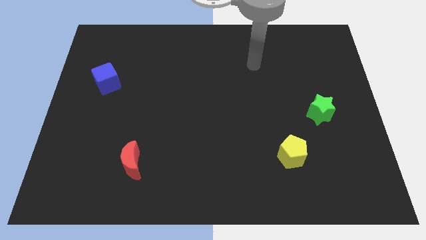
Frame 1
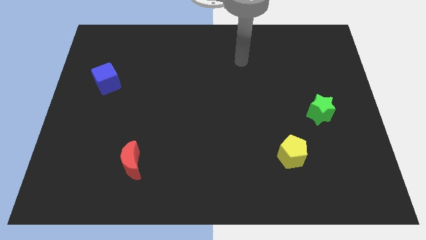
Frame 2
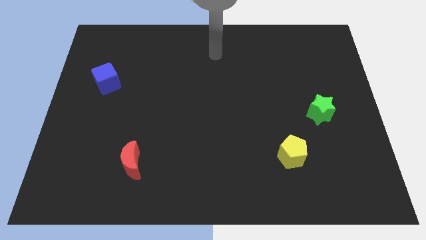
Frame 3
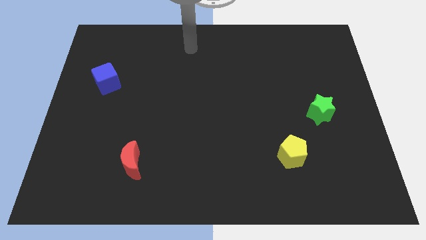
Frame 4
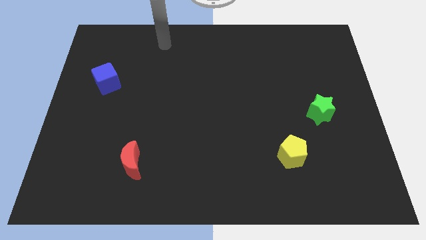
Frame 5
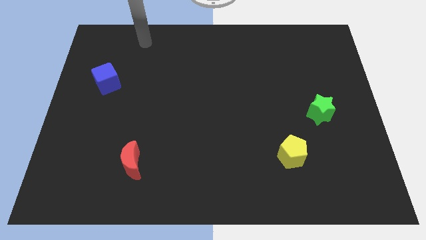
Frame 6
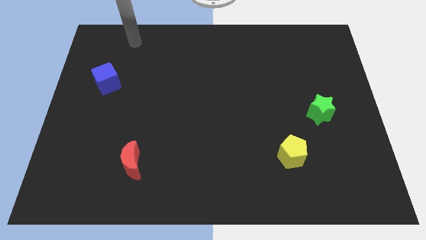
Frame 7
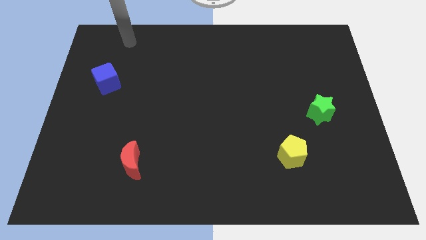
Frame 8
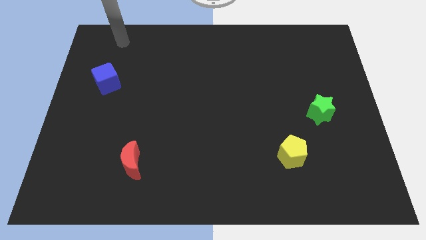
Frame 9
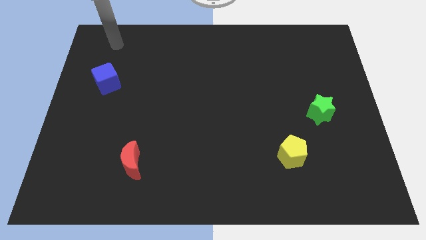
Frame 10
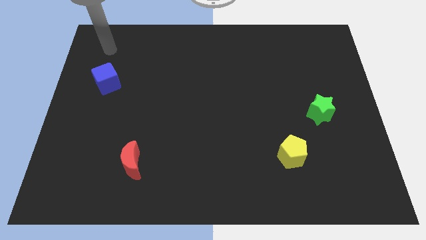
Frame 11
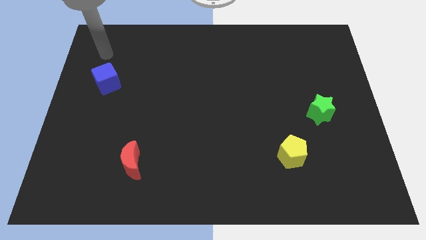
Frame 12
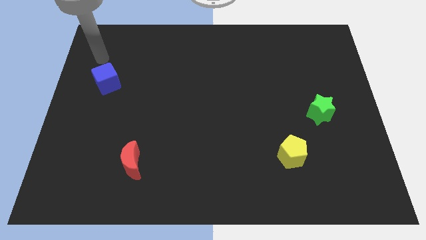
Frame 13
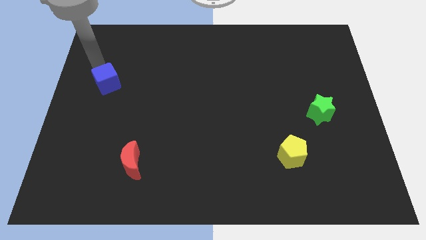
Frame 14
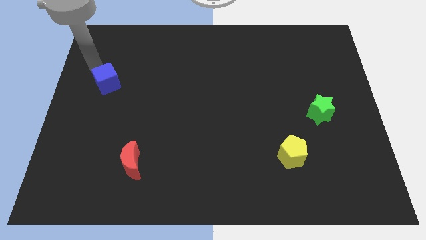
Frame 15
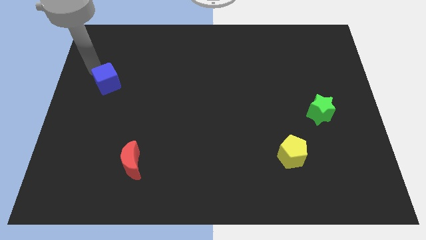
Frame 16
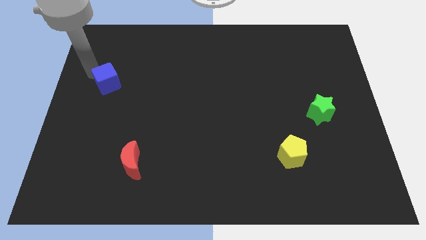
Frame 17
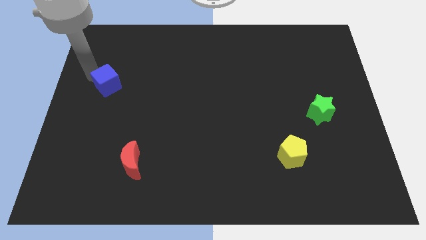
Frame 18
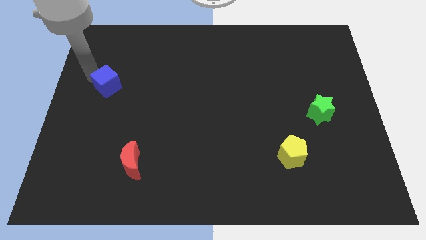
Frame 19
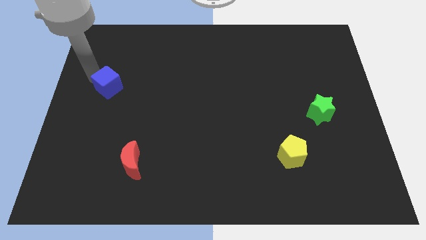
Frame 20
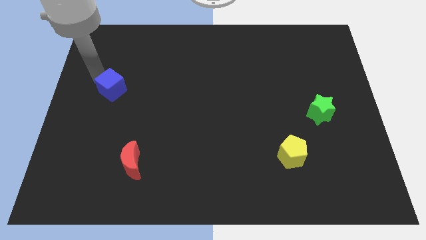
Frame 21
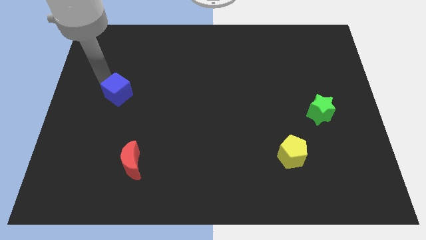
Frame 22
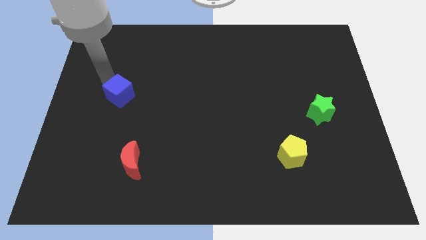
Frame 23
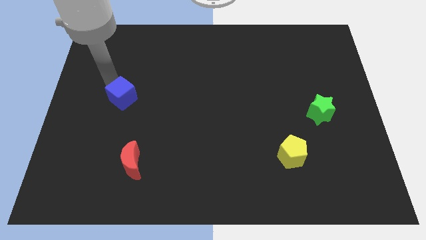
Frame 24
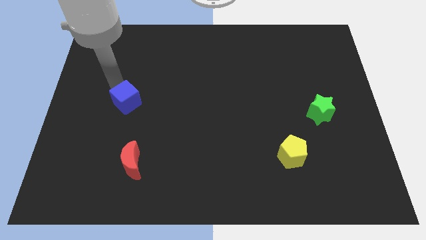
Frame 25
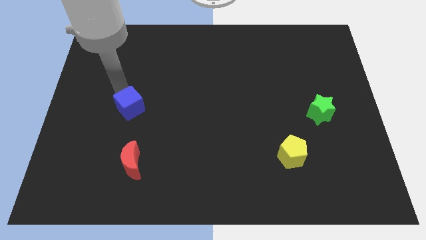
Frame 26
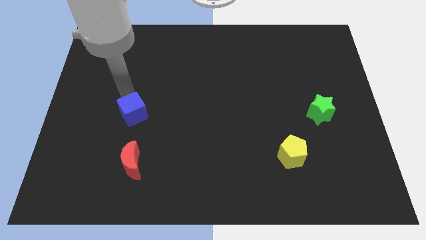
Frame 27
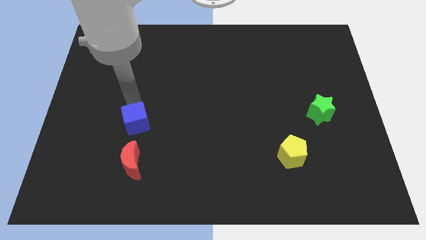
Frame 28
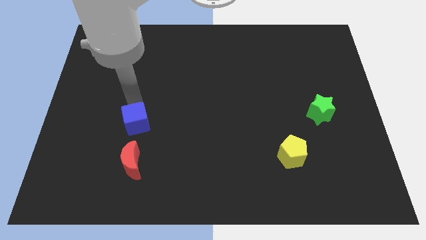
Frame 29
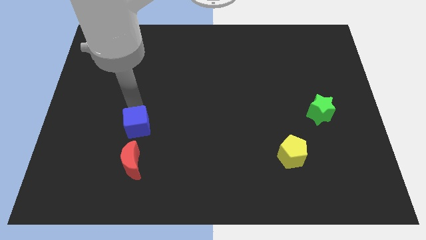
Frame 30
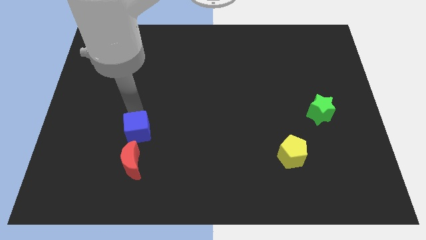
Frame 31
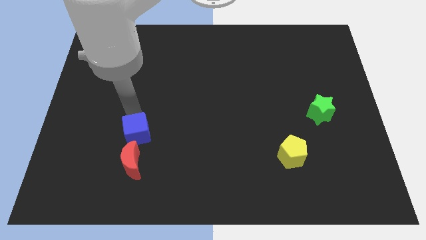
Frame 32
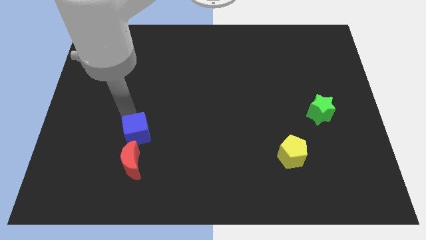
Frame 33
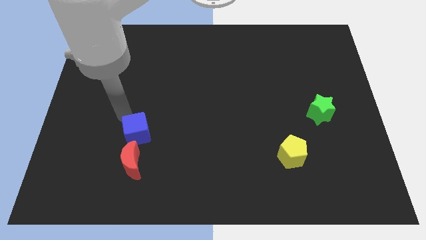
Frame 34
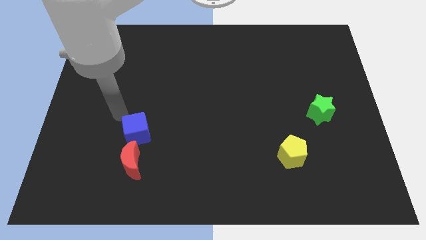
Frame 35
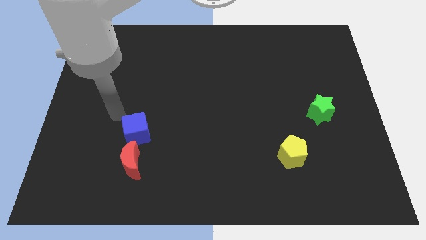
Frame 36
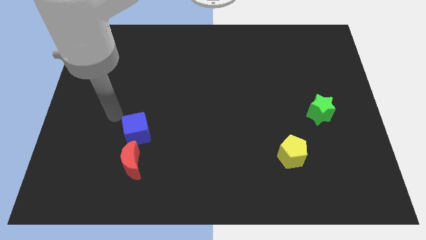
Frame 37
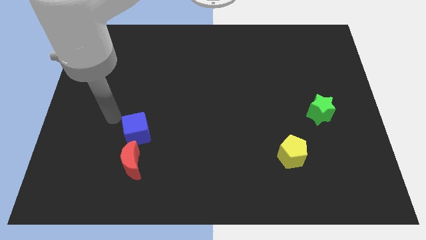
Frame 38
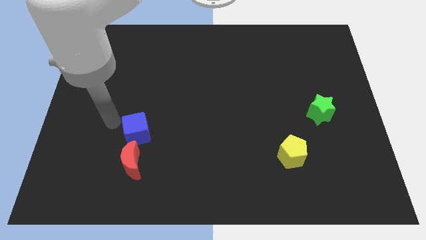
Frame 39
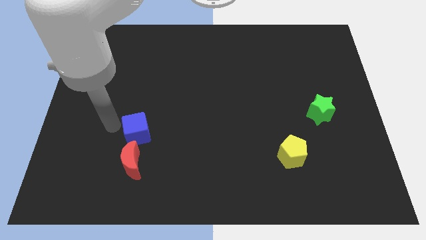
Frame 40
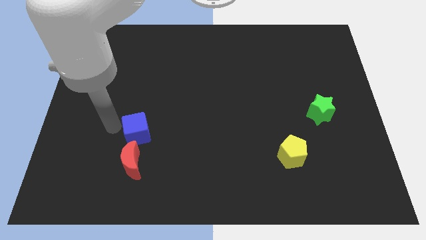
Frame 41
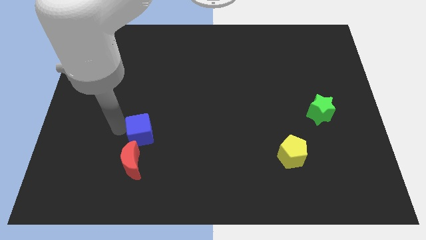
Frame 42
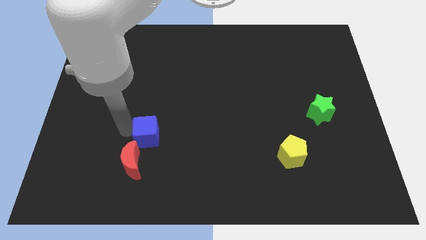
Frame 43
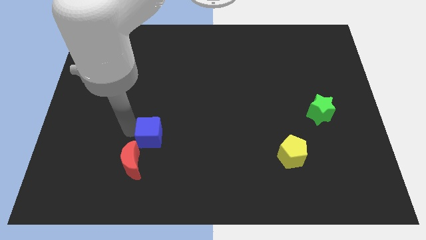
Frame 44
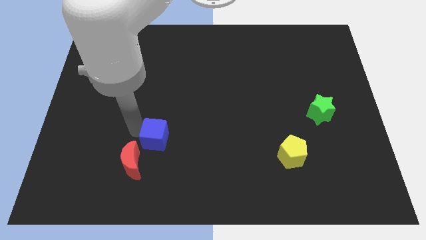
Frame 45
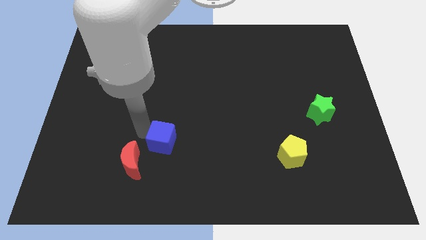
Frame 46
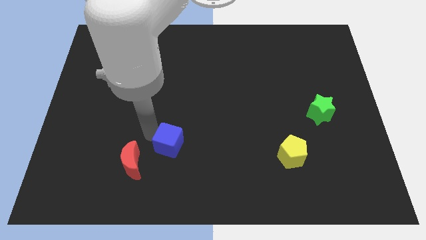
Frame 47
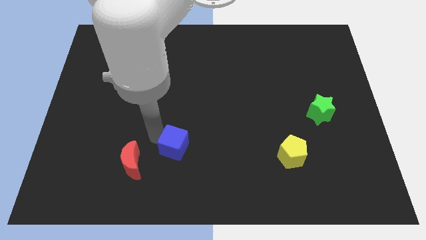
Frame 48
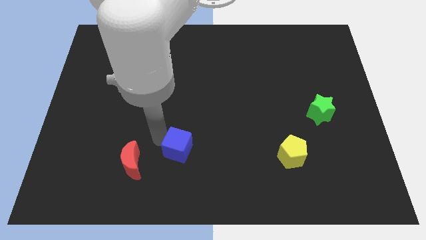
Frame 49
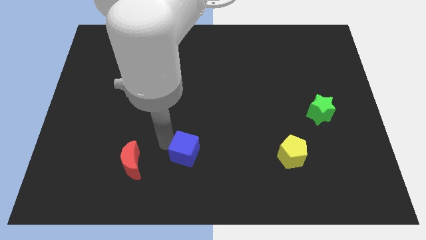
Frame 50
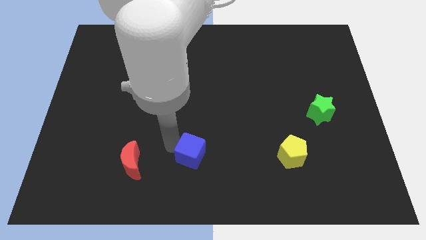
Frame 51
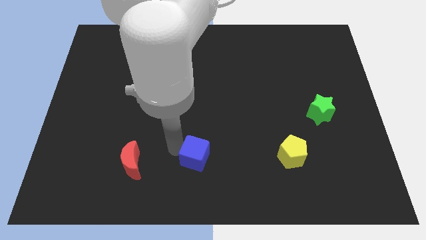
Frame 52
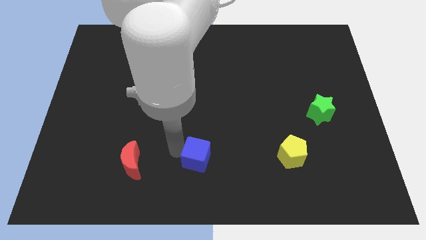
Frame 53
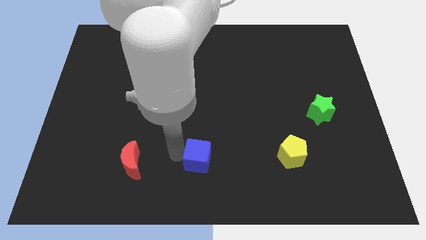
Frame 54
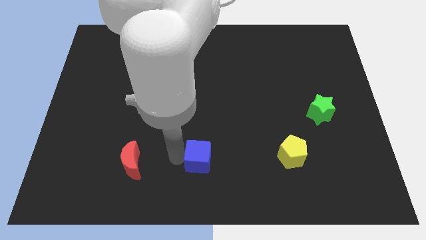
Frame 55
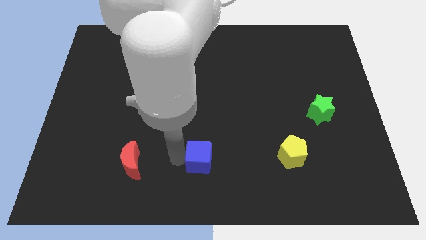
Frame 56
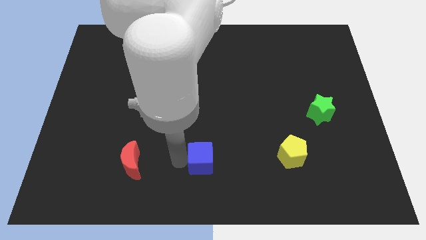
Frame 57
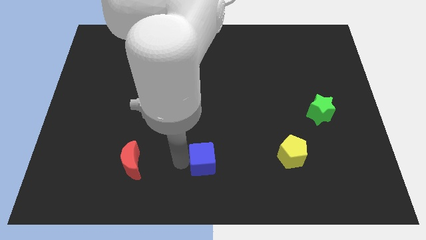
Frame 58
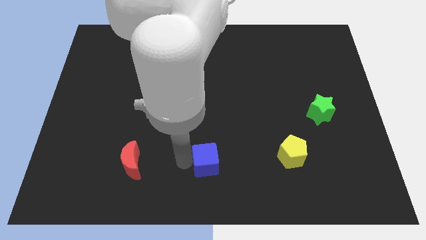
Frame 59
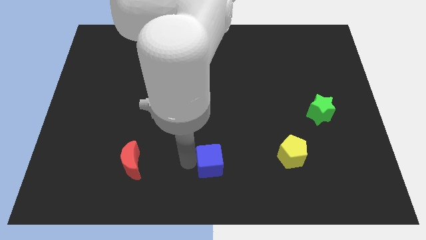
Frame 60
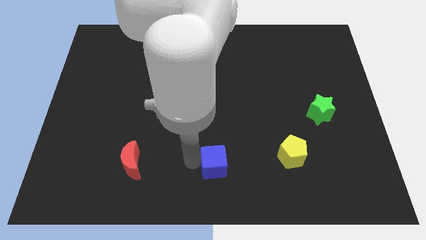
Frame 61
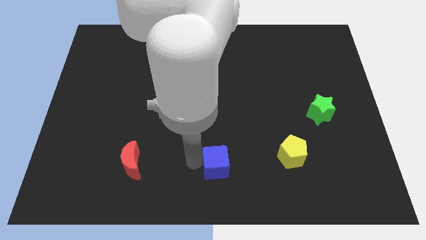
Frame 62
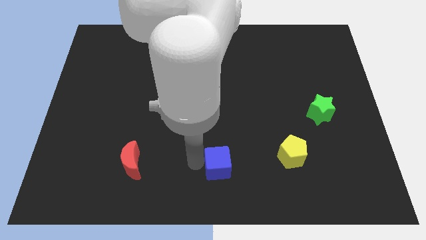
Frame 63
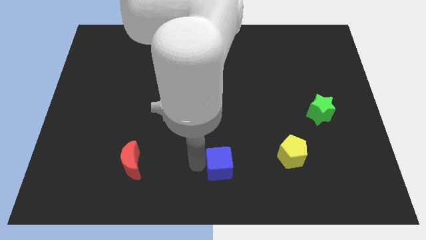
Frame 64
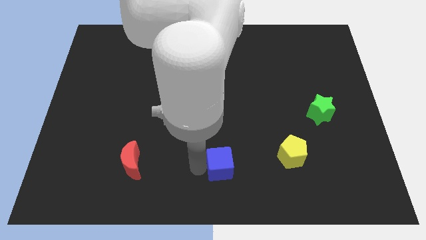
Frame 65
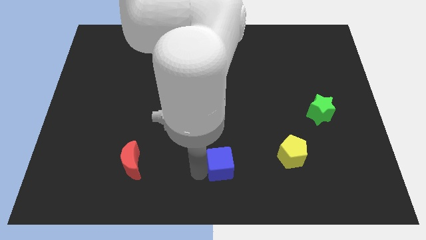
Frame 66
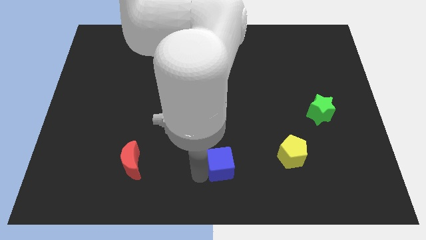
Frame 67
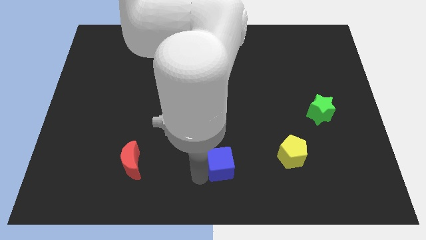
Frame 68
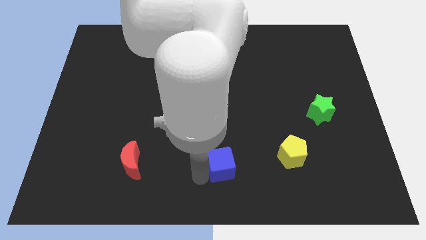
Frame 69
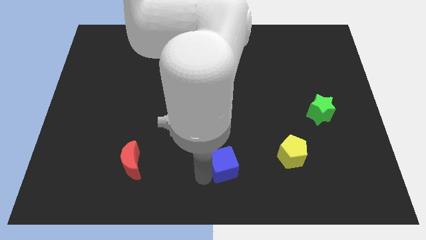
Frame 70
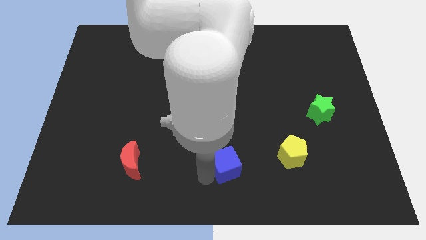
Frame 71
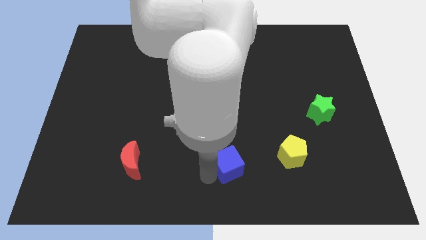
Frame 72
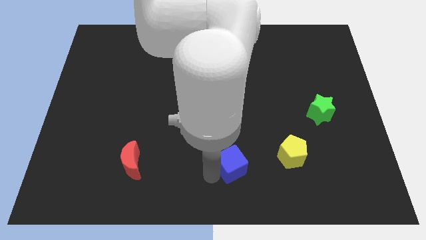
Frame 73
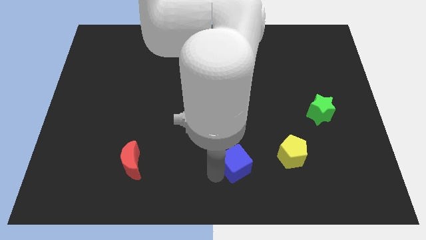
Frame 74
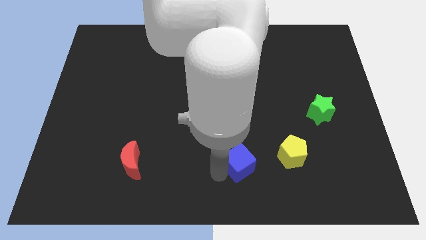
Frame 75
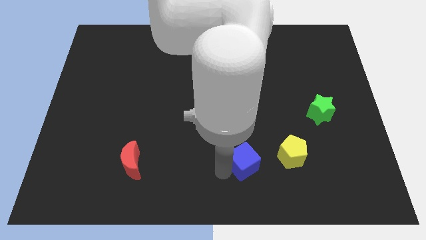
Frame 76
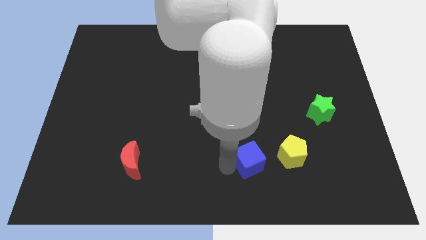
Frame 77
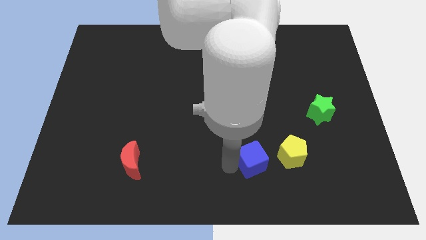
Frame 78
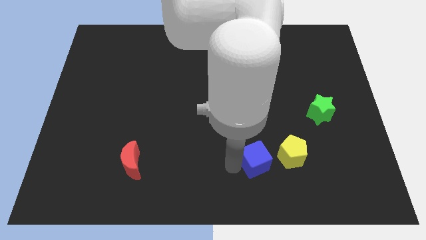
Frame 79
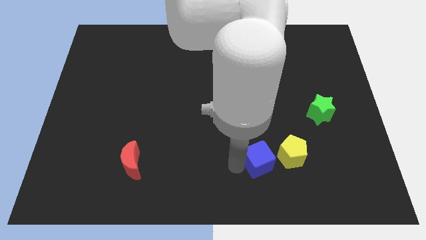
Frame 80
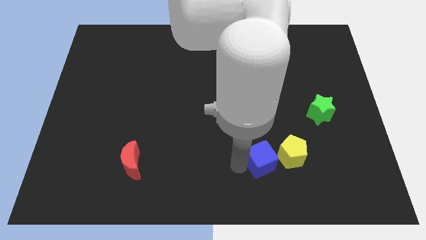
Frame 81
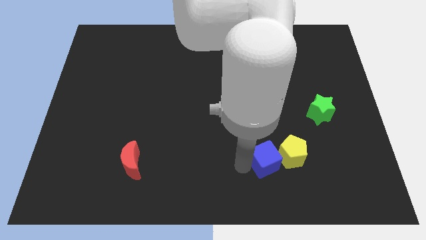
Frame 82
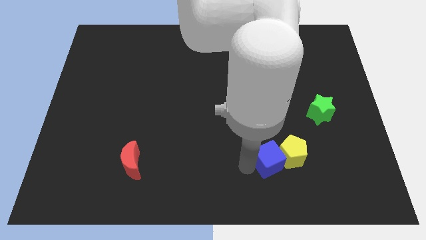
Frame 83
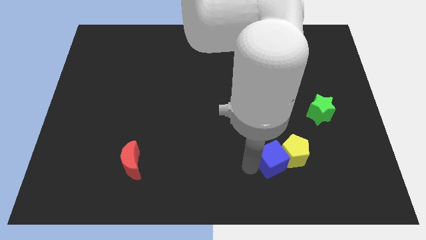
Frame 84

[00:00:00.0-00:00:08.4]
put the cube to the yellow pentagon
